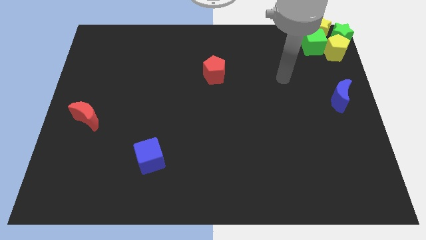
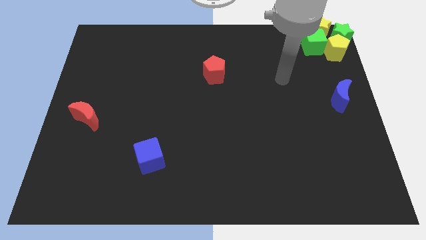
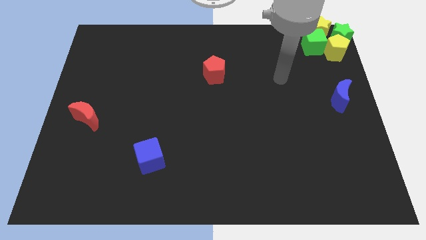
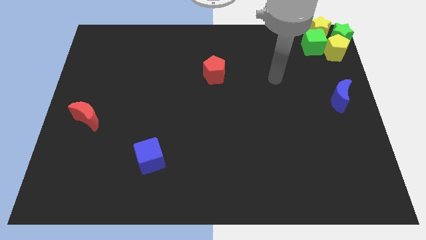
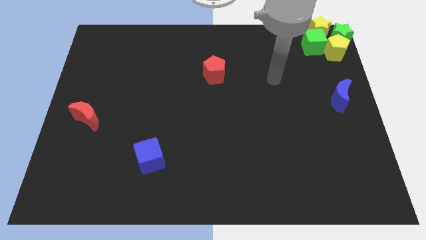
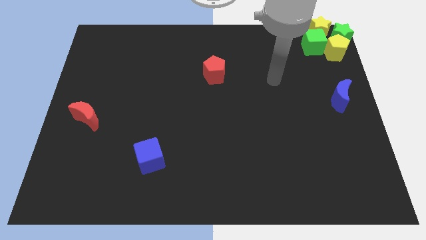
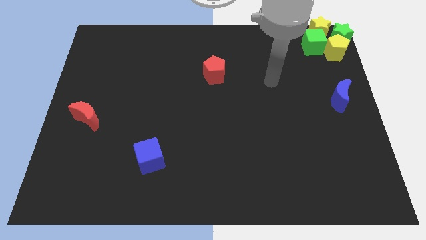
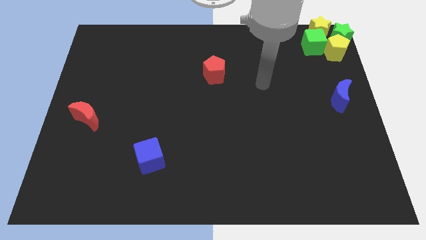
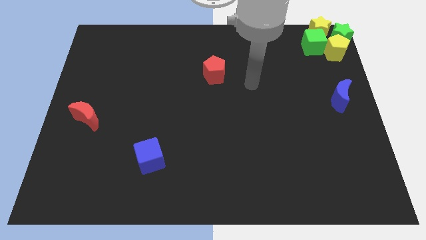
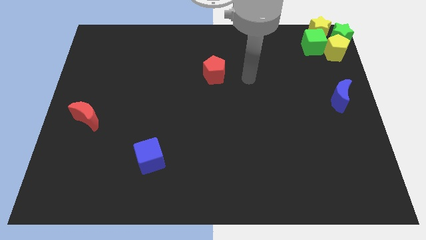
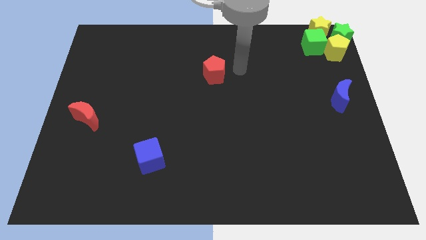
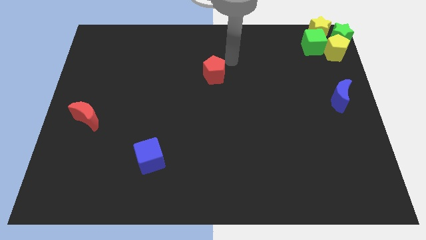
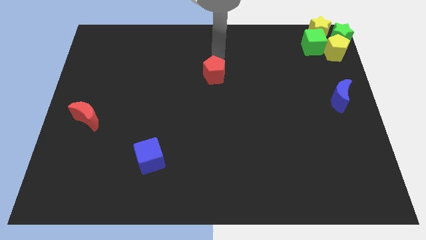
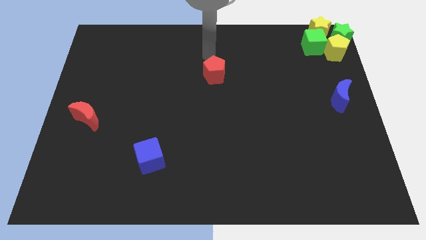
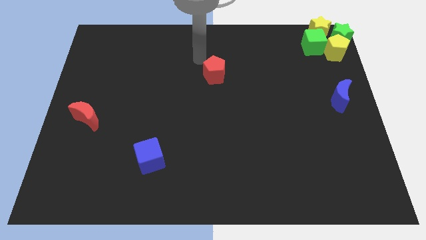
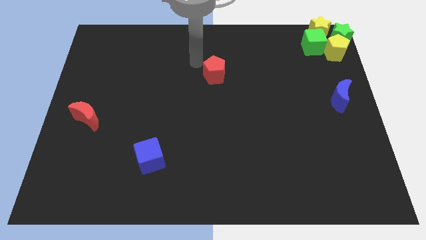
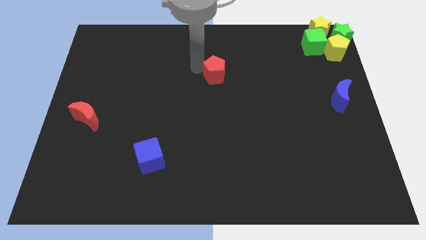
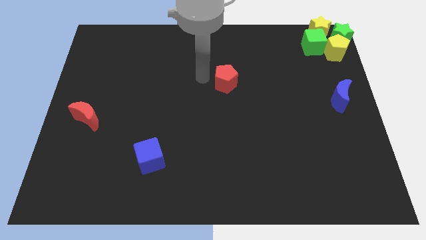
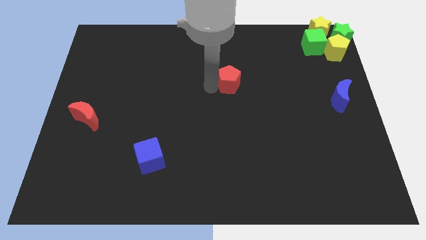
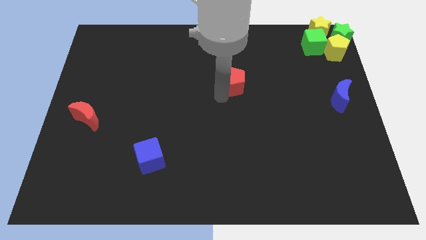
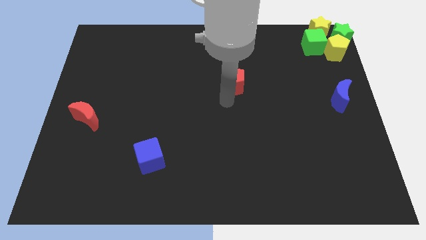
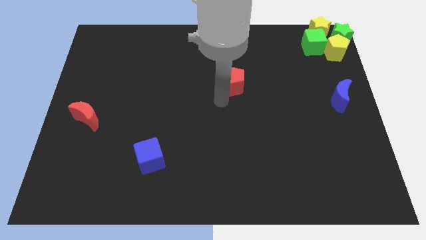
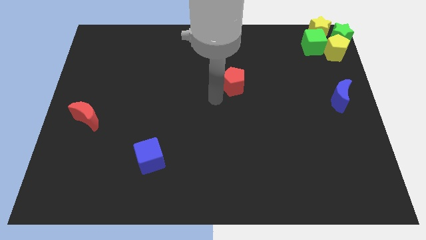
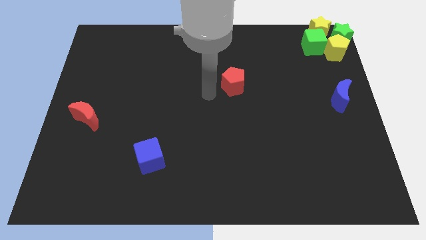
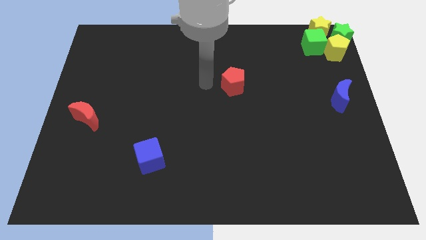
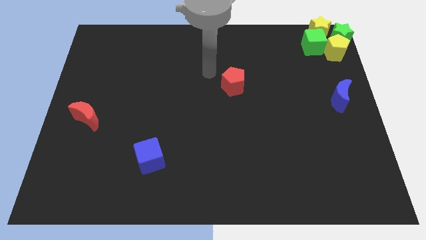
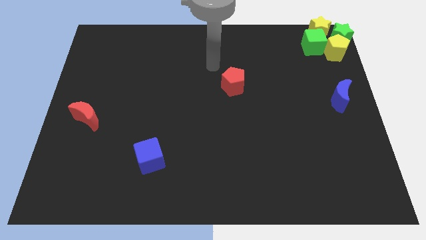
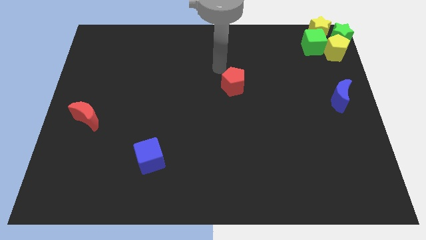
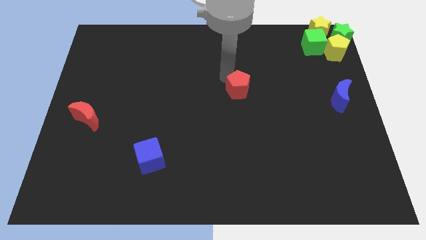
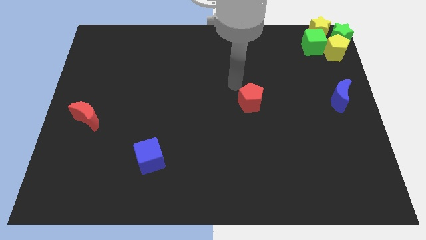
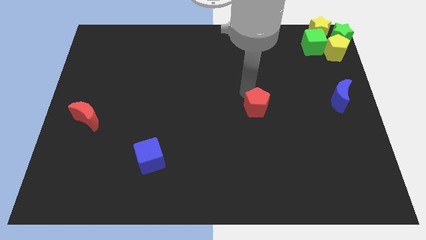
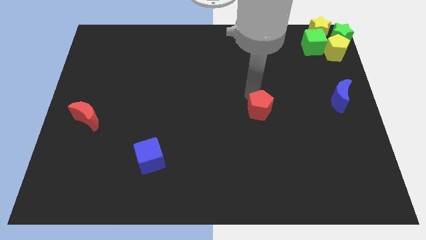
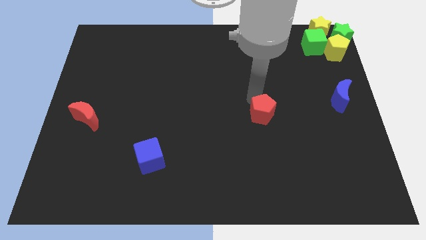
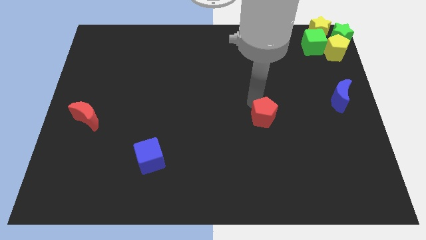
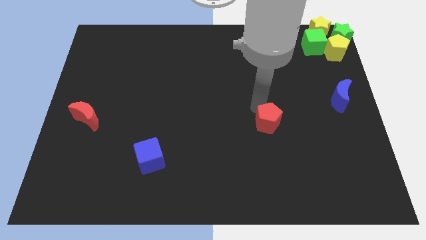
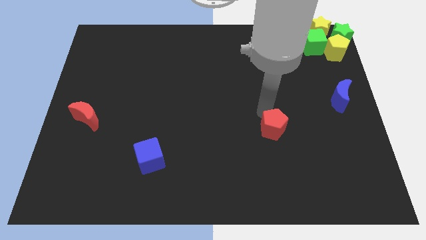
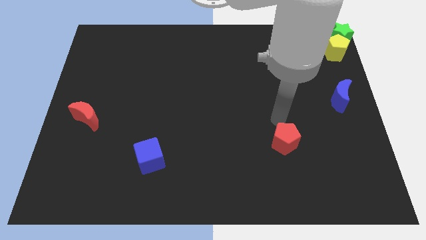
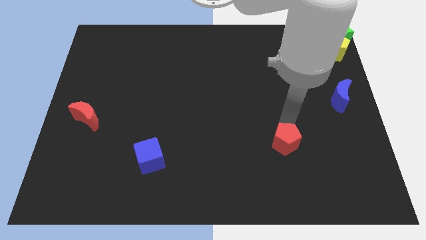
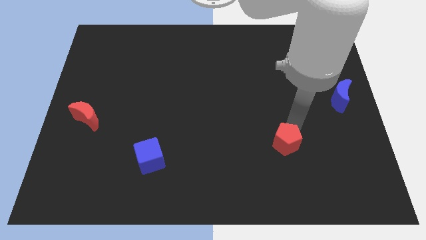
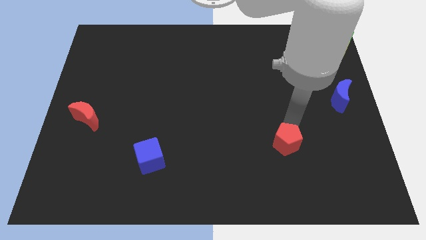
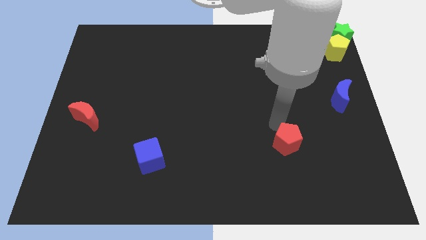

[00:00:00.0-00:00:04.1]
push the red pentagon to the bottom of the board

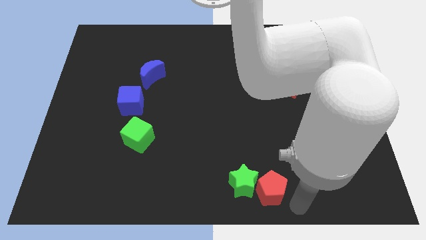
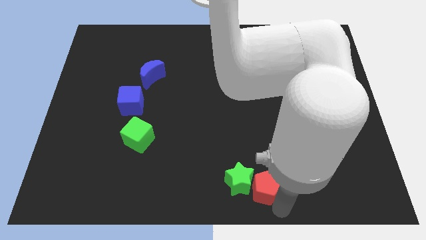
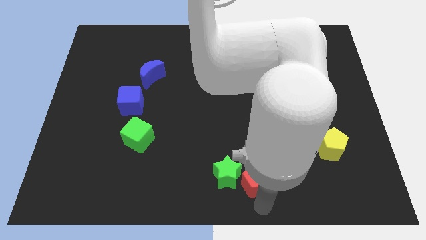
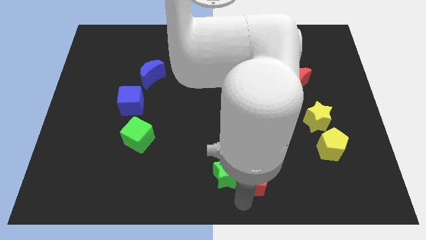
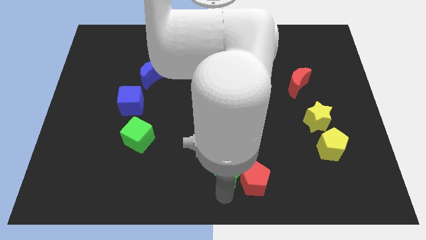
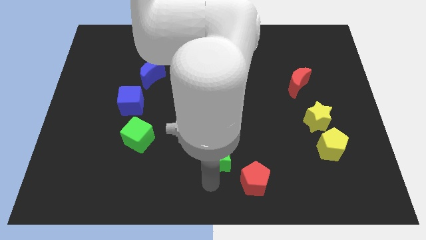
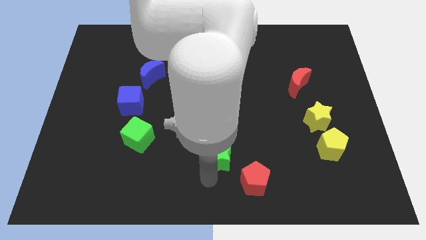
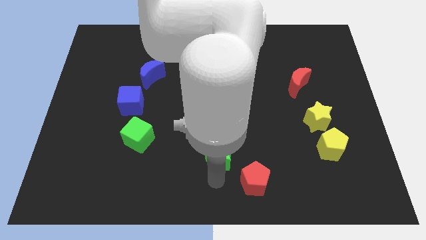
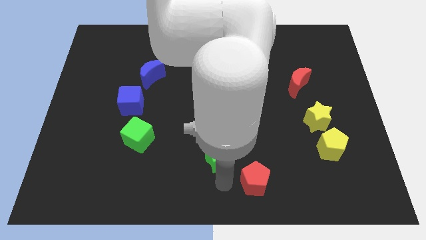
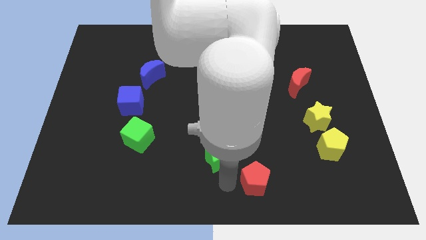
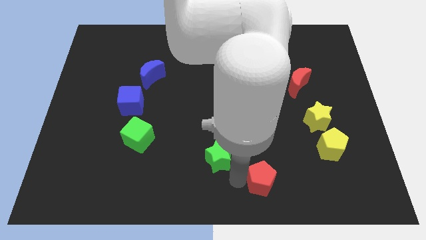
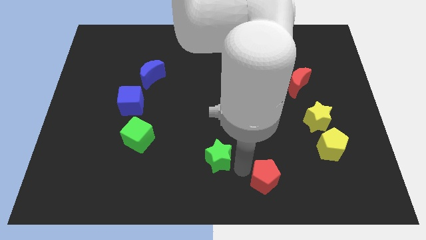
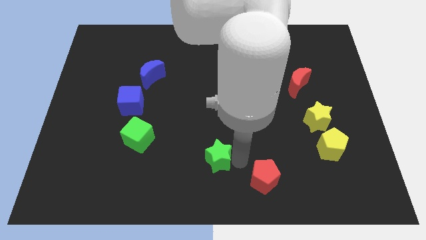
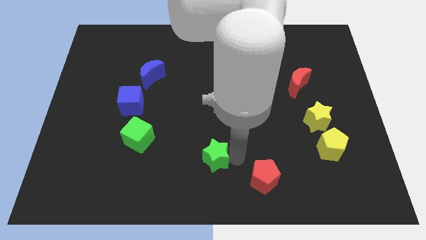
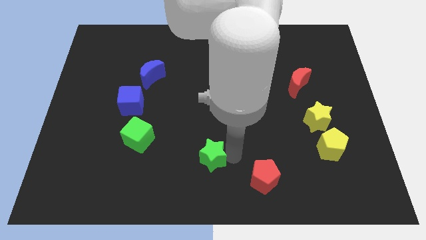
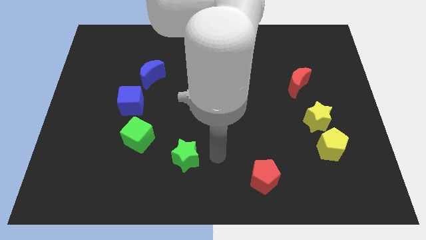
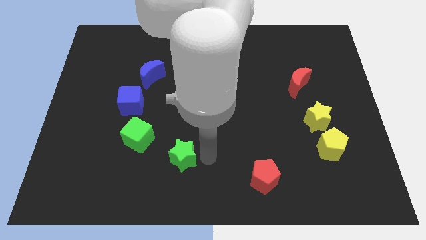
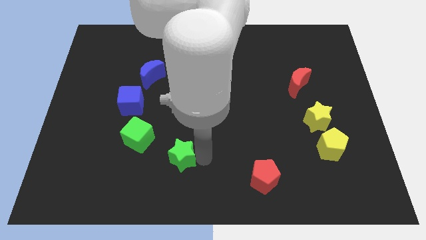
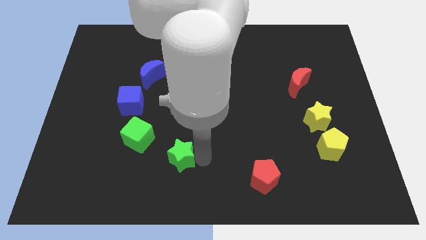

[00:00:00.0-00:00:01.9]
separate the green star from the red pentagon

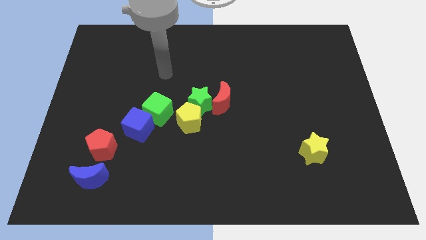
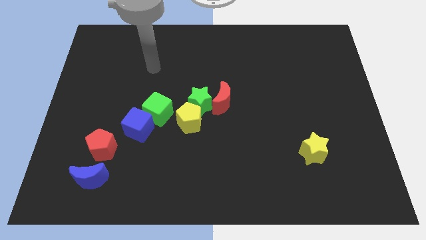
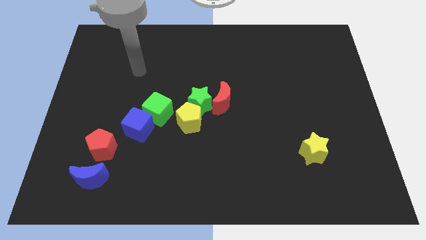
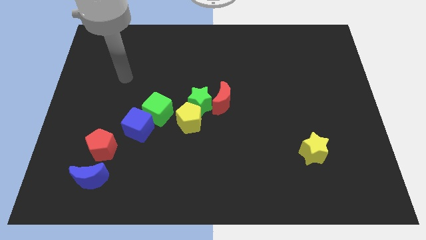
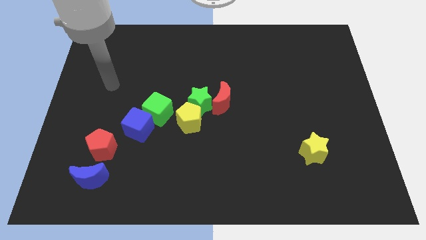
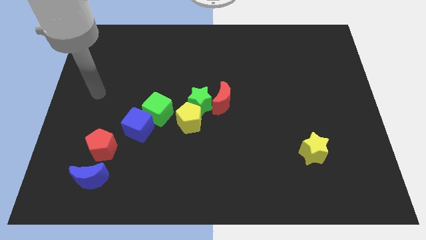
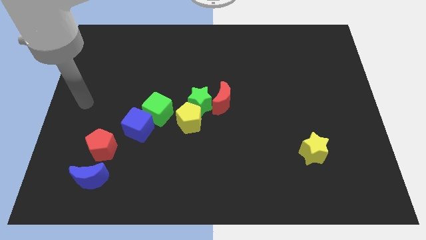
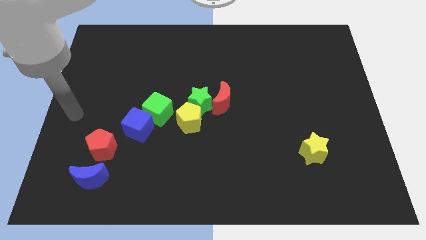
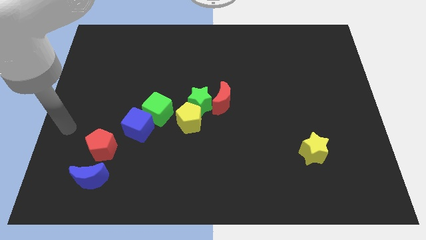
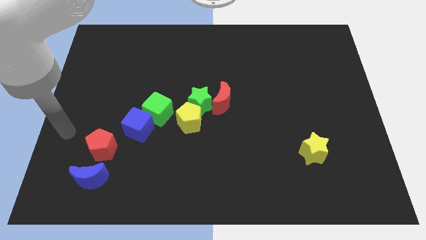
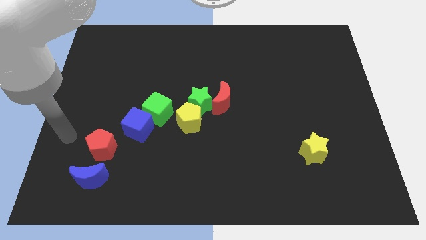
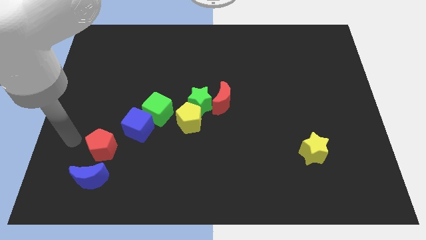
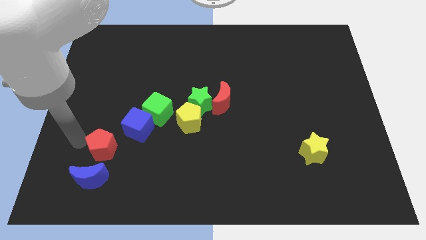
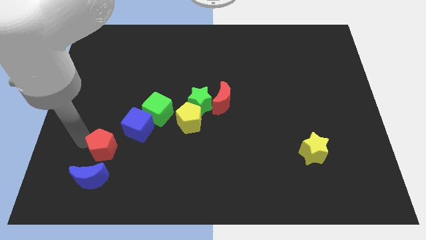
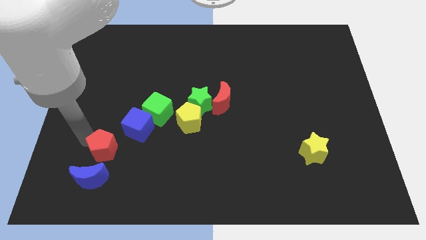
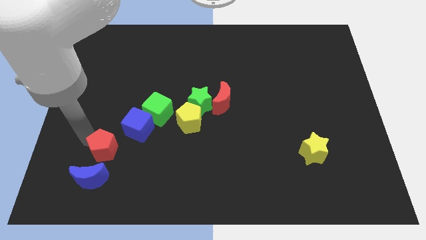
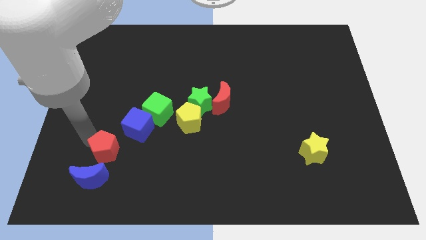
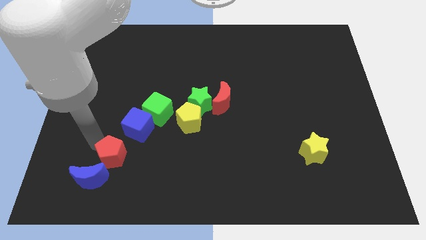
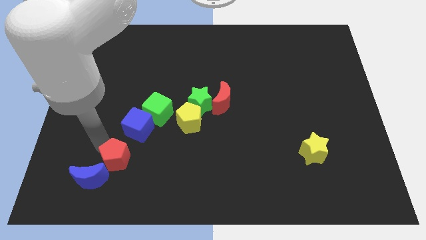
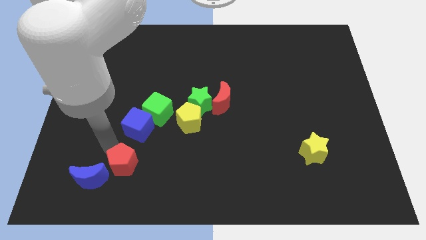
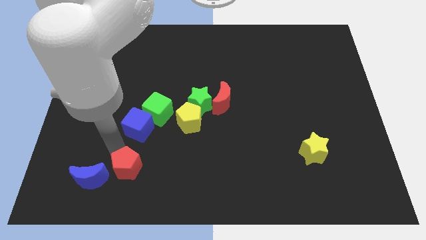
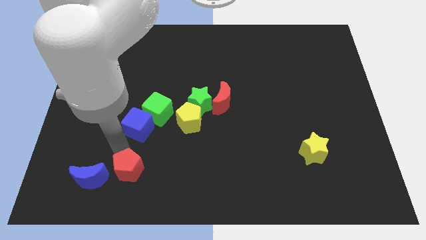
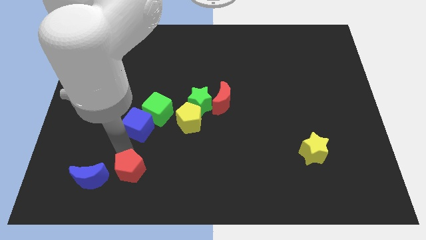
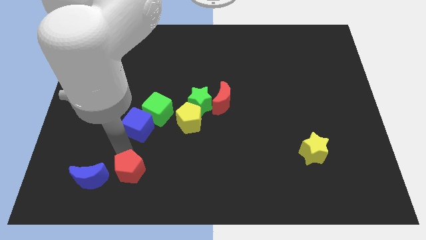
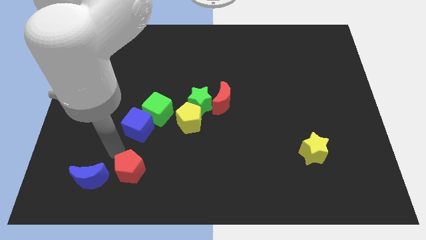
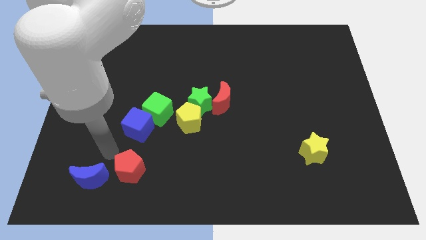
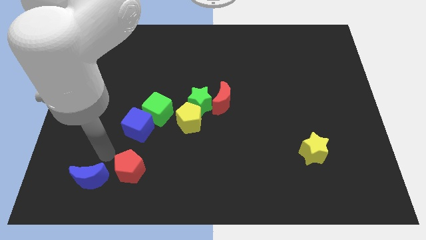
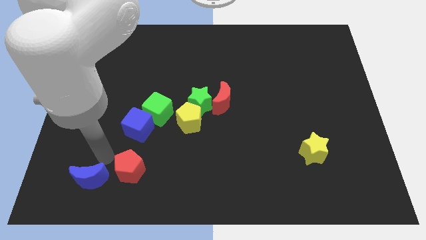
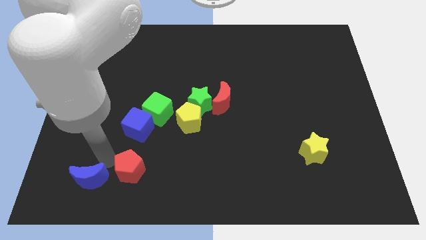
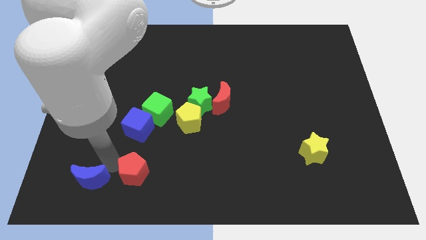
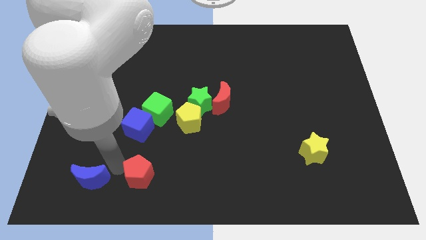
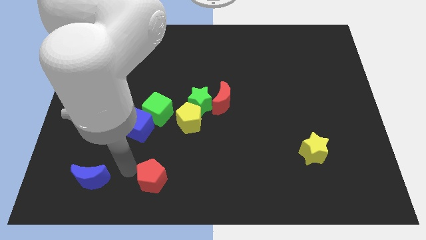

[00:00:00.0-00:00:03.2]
push the red pentagon to the bottom side of the blue cube
